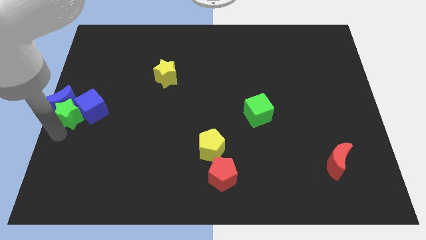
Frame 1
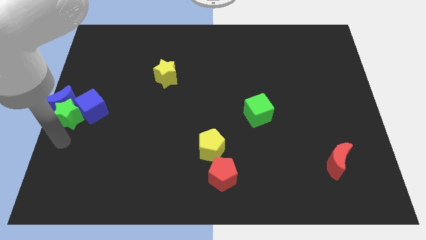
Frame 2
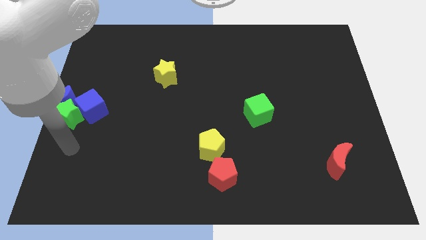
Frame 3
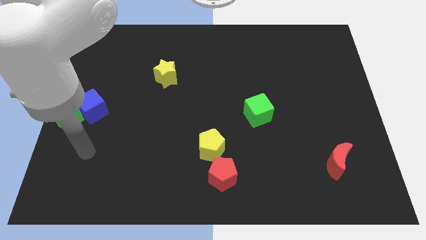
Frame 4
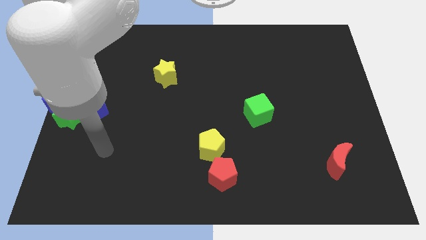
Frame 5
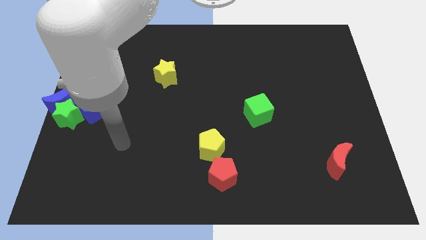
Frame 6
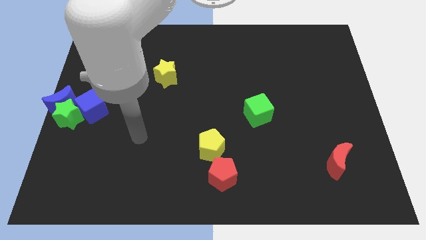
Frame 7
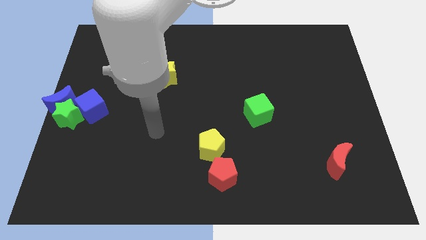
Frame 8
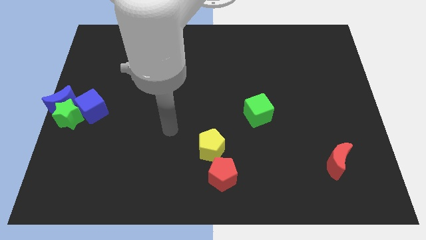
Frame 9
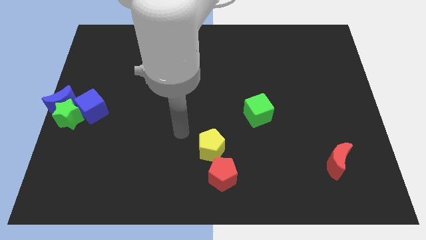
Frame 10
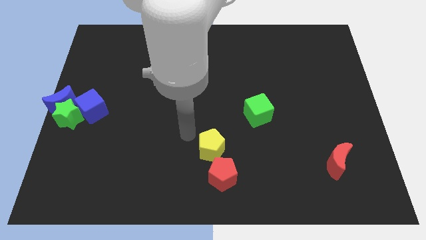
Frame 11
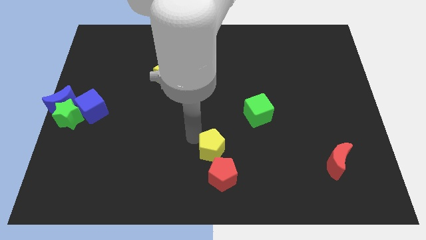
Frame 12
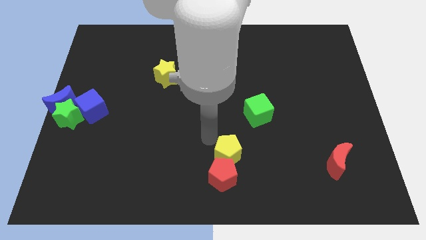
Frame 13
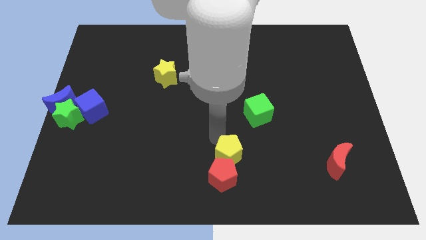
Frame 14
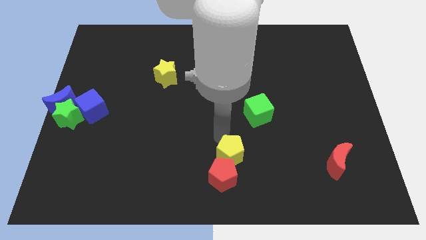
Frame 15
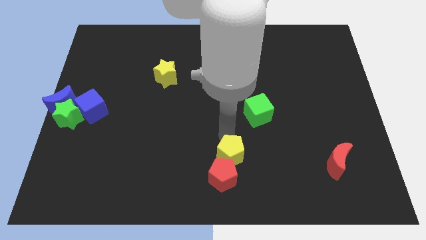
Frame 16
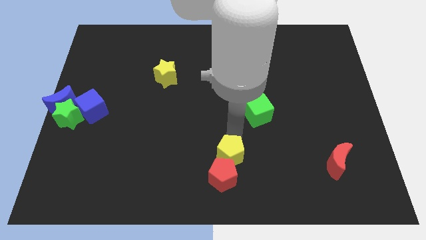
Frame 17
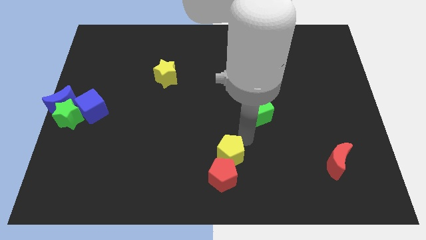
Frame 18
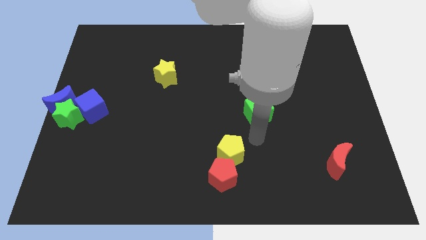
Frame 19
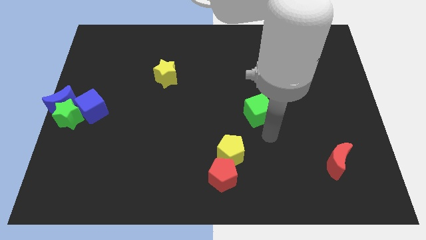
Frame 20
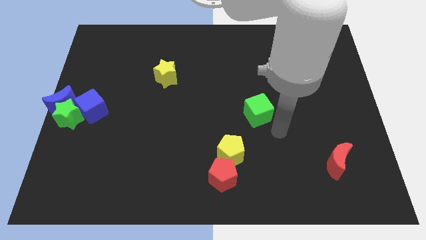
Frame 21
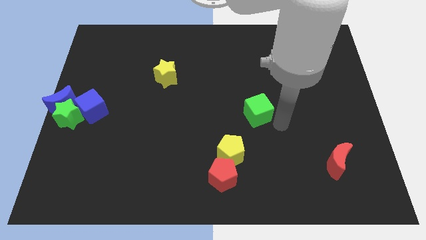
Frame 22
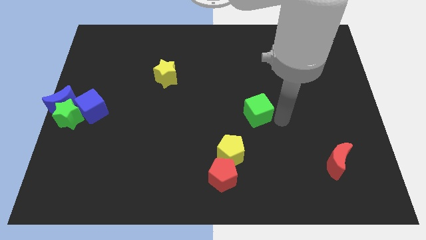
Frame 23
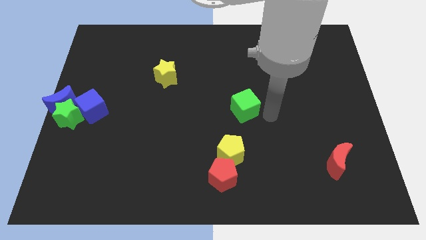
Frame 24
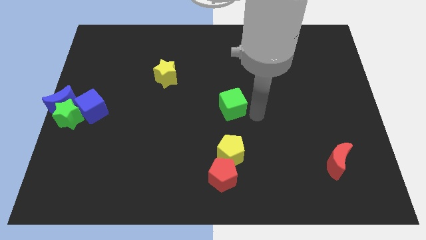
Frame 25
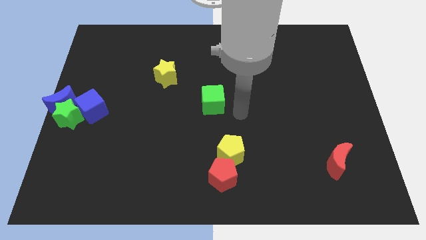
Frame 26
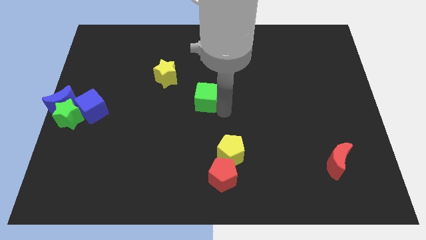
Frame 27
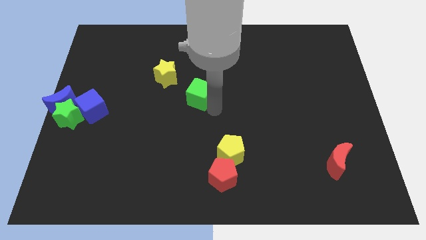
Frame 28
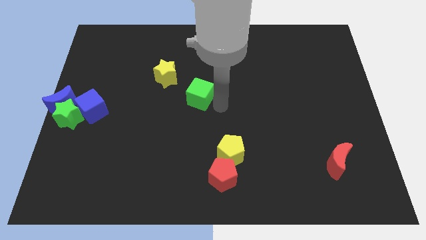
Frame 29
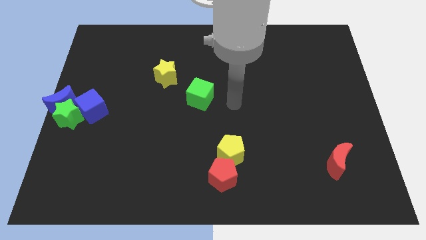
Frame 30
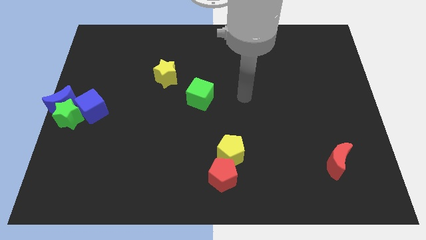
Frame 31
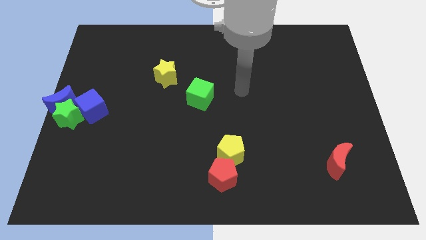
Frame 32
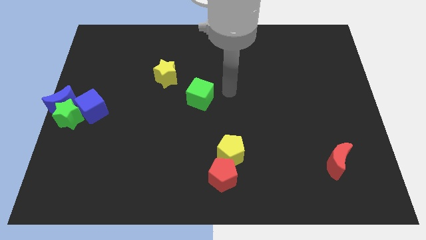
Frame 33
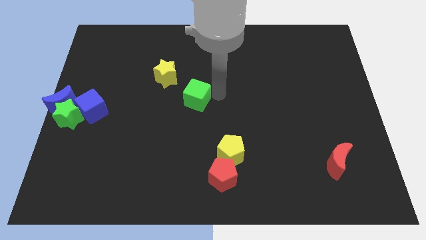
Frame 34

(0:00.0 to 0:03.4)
slide the green cube to the bottom right side of the yellow star

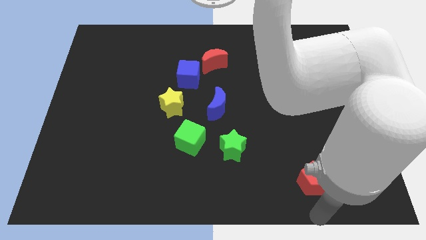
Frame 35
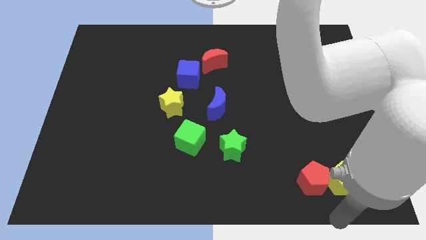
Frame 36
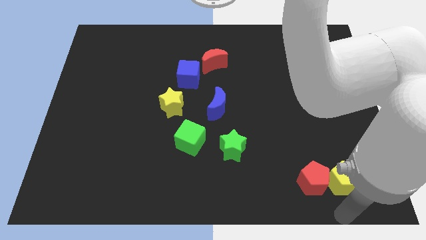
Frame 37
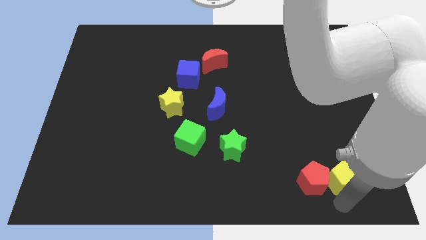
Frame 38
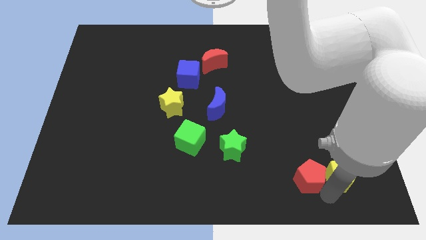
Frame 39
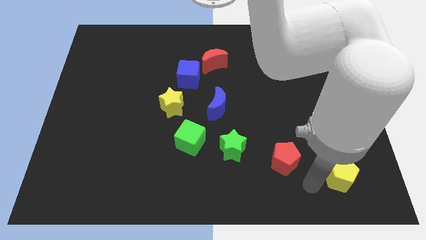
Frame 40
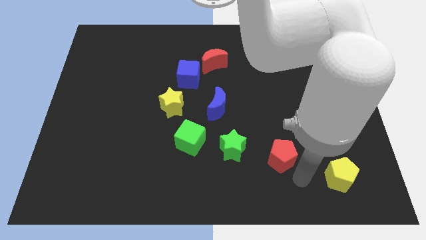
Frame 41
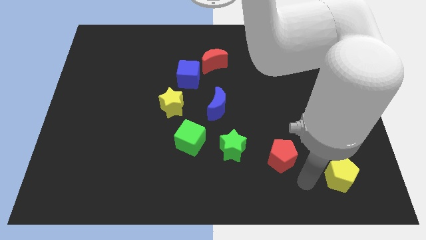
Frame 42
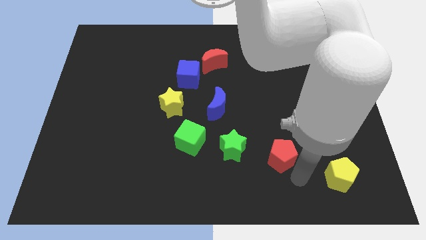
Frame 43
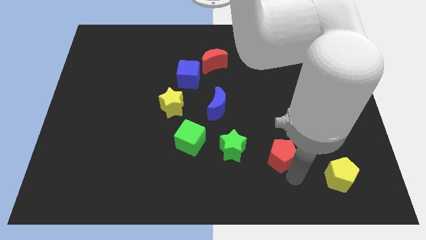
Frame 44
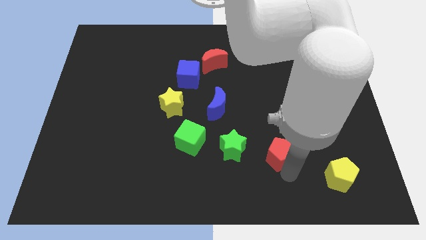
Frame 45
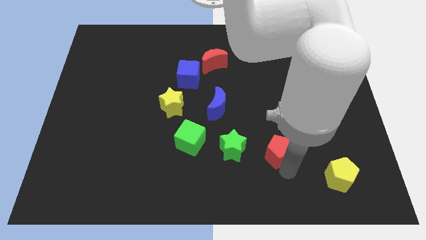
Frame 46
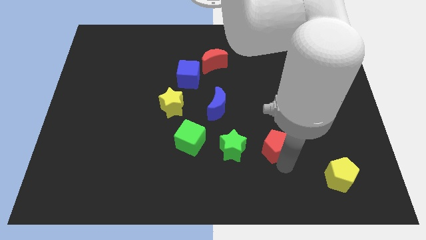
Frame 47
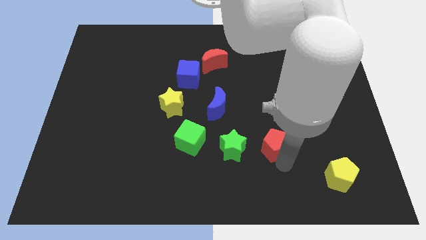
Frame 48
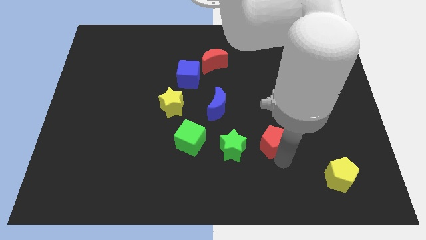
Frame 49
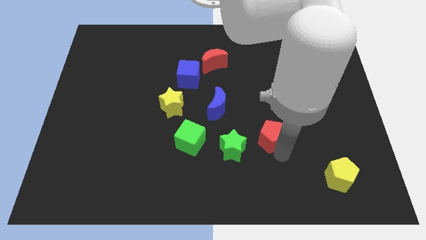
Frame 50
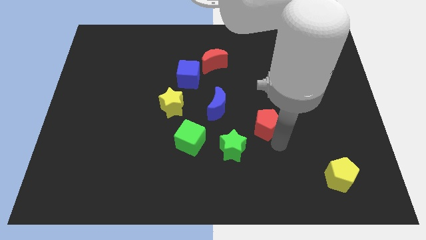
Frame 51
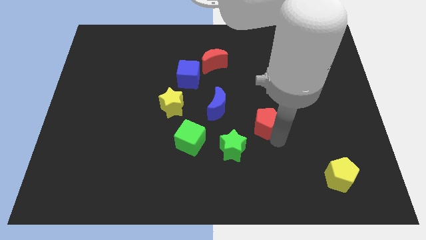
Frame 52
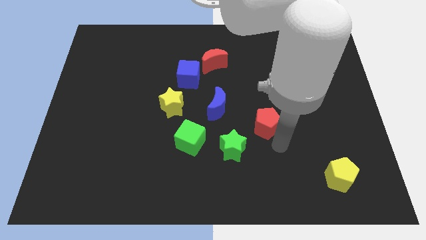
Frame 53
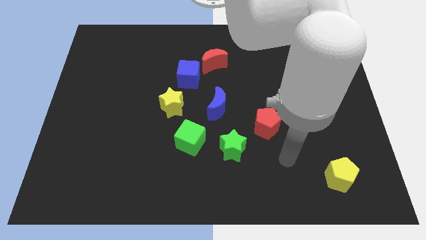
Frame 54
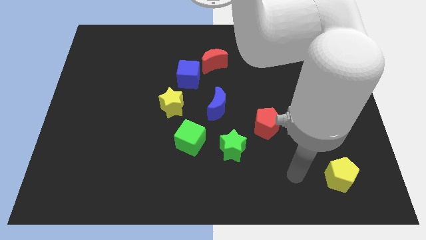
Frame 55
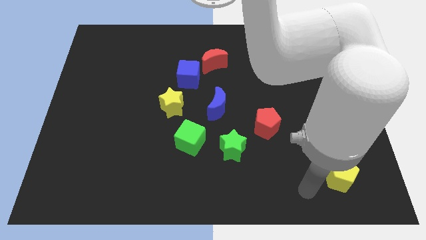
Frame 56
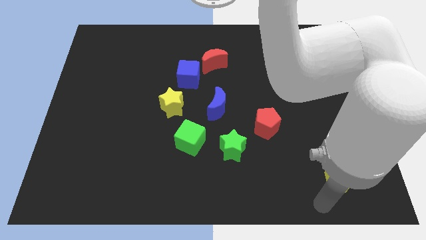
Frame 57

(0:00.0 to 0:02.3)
move the red pentagon close to the top right side of the green star

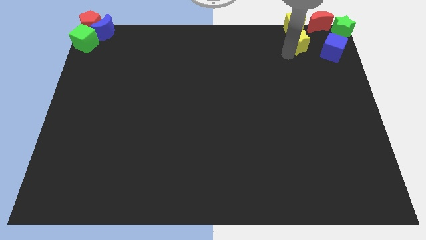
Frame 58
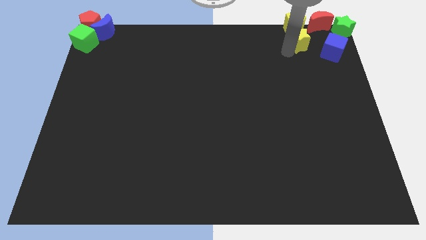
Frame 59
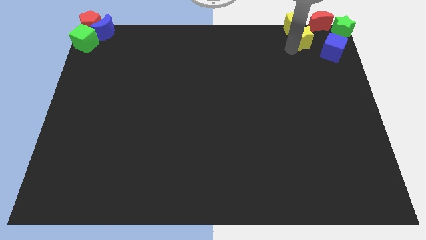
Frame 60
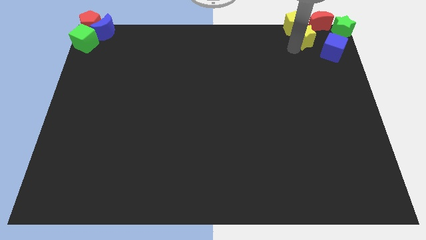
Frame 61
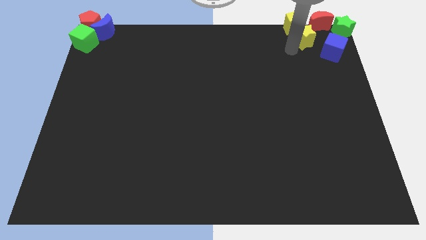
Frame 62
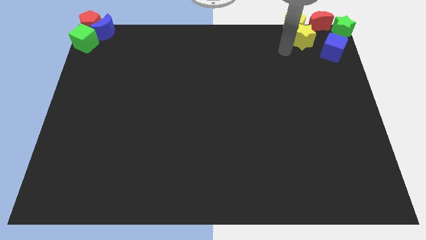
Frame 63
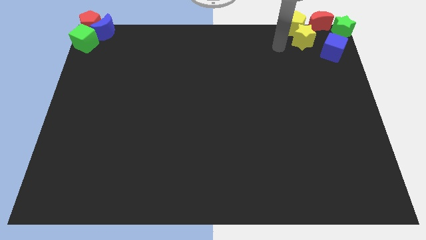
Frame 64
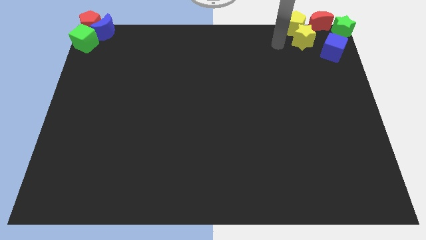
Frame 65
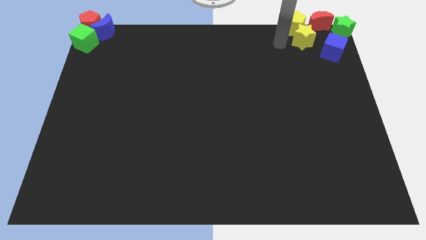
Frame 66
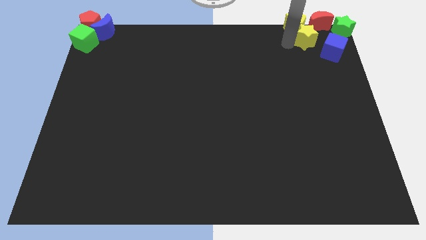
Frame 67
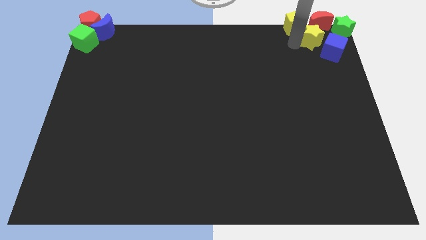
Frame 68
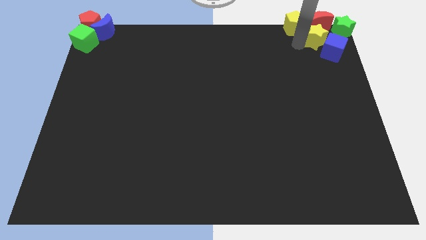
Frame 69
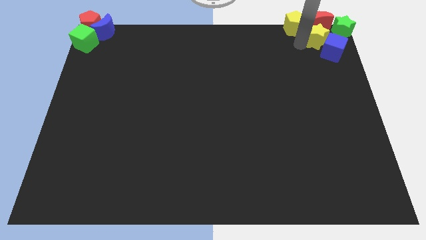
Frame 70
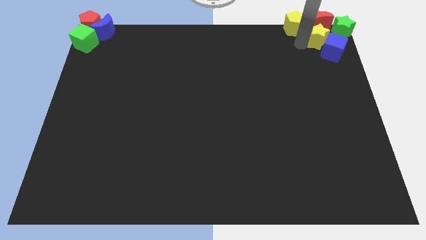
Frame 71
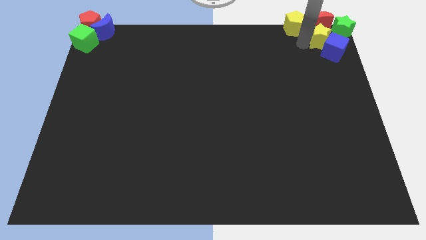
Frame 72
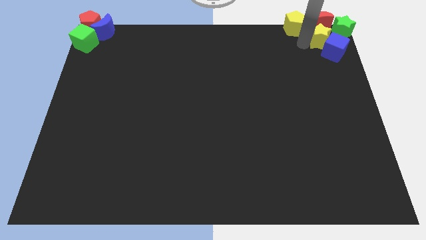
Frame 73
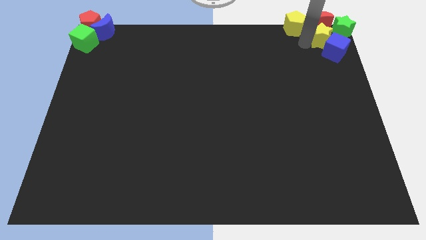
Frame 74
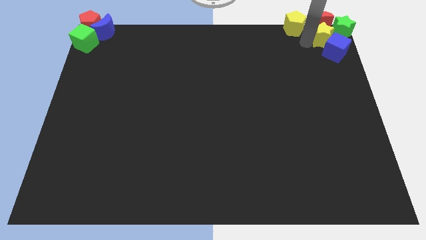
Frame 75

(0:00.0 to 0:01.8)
adjust the yellow star in between the red moon and the blue cube

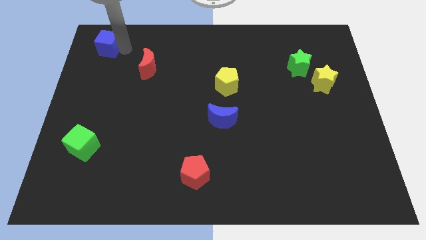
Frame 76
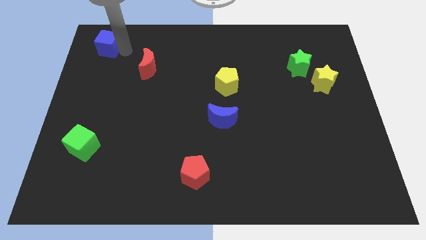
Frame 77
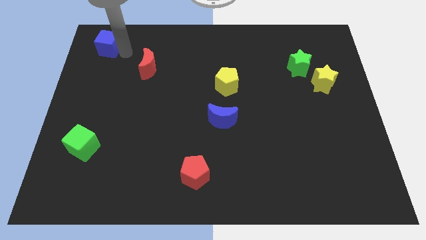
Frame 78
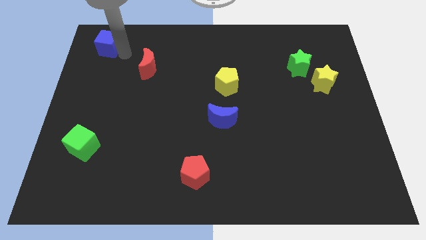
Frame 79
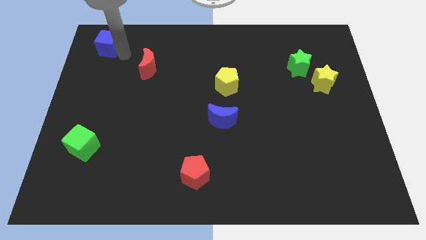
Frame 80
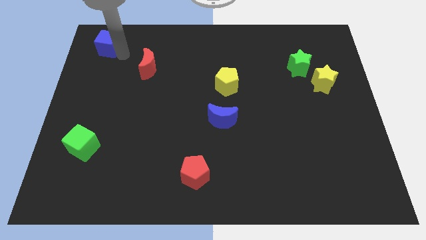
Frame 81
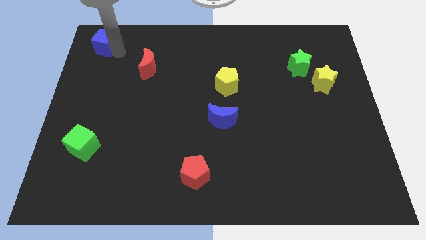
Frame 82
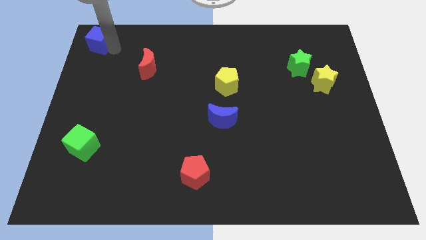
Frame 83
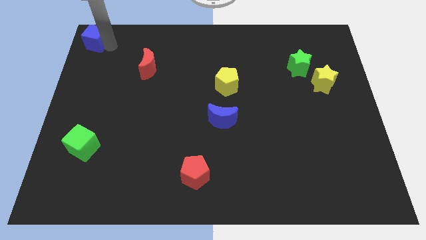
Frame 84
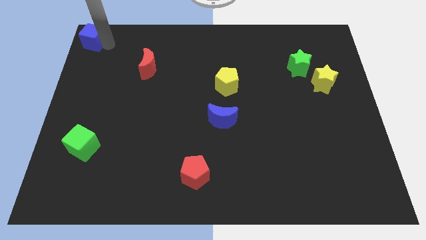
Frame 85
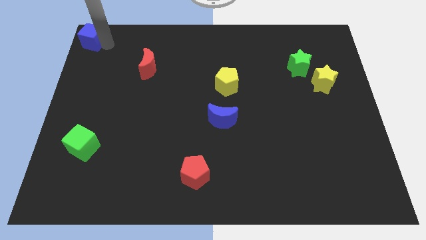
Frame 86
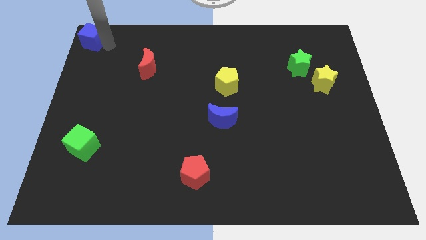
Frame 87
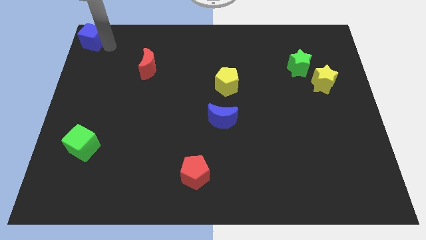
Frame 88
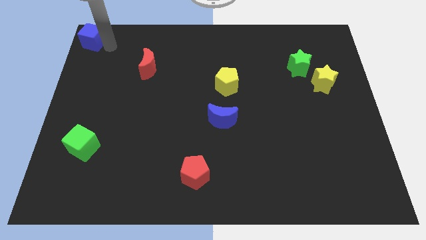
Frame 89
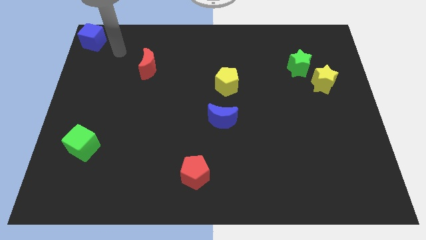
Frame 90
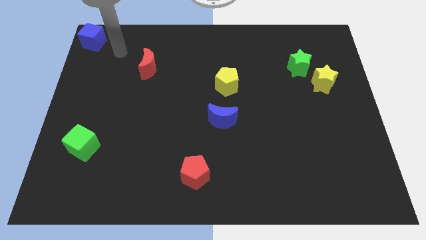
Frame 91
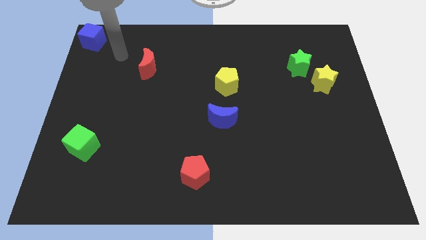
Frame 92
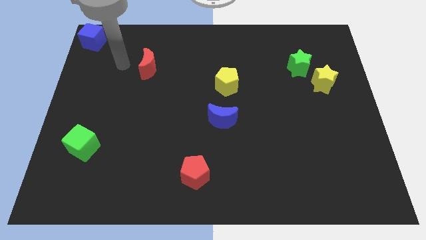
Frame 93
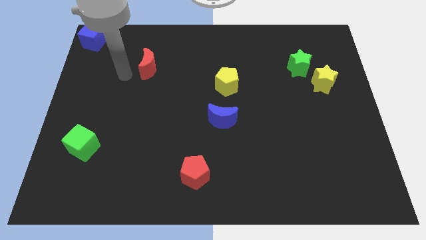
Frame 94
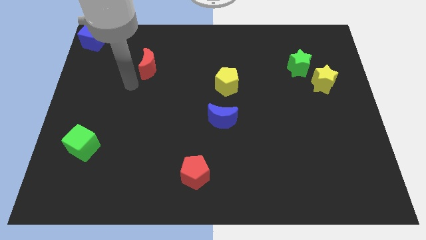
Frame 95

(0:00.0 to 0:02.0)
place the blue cube towards the left corner of the board
